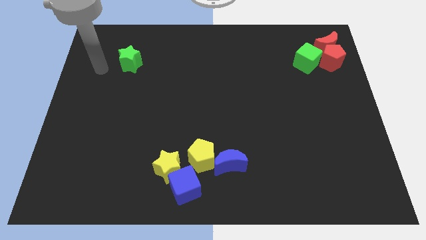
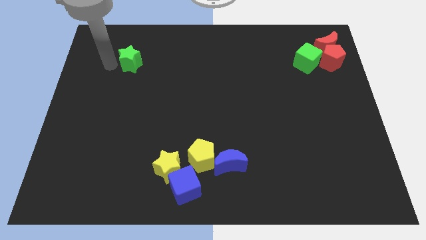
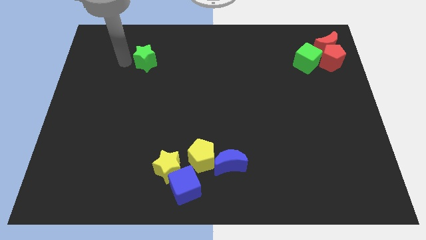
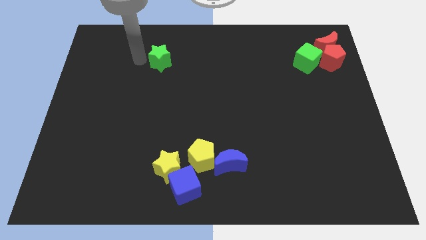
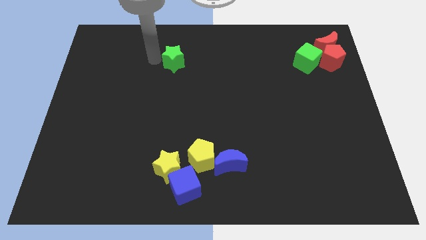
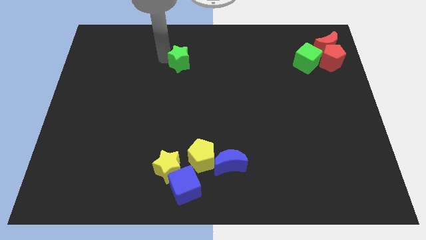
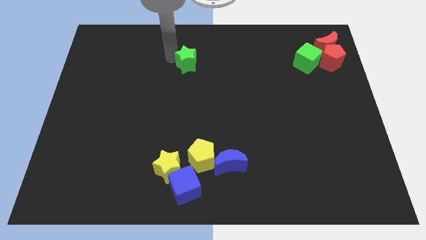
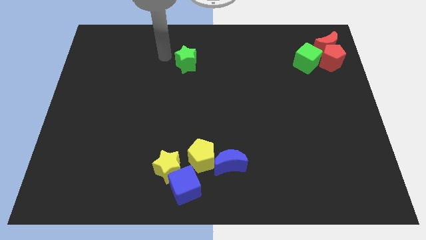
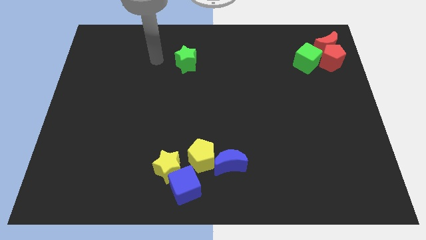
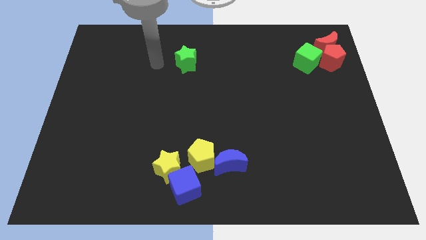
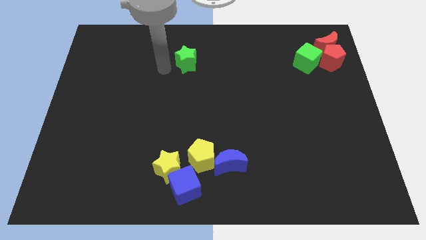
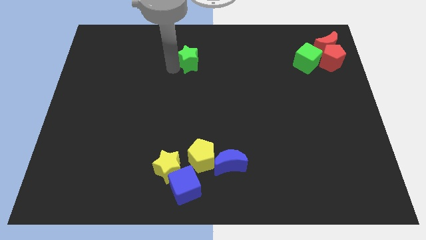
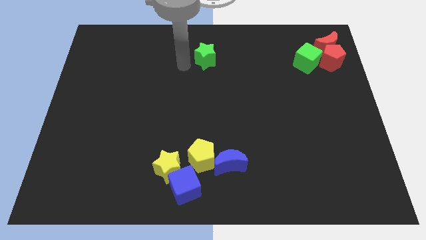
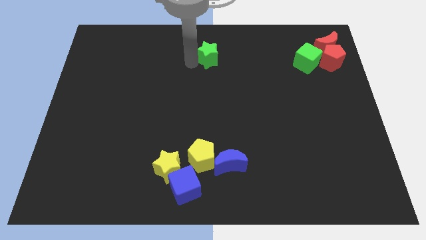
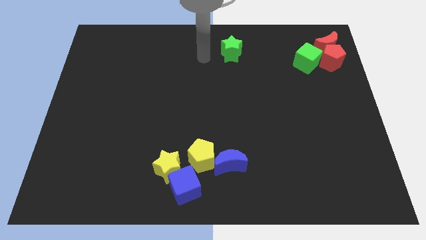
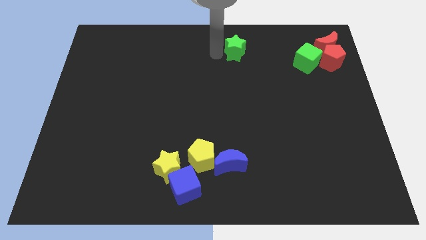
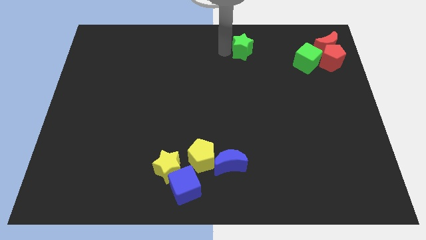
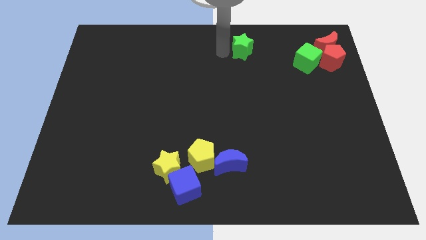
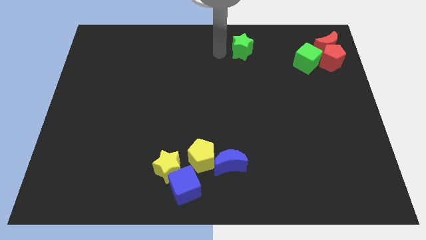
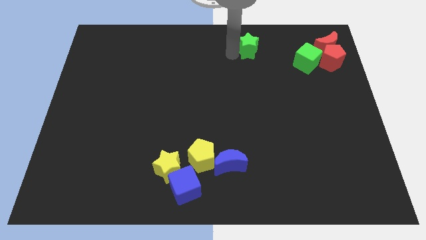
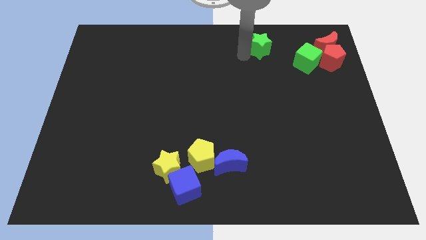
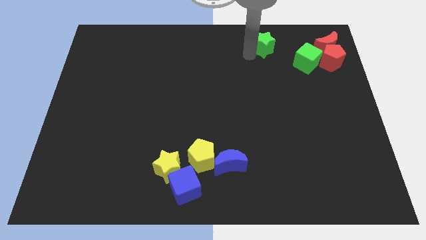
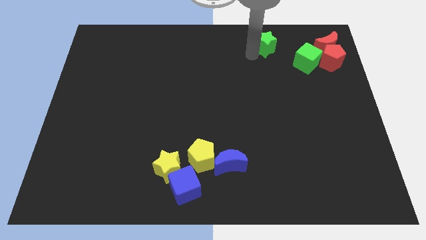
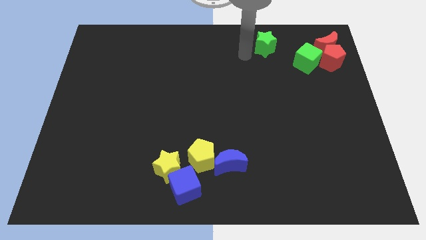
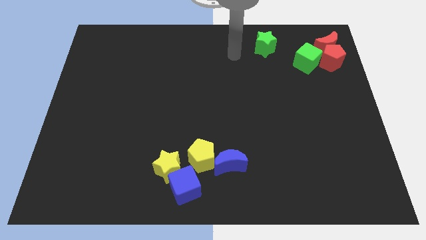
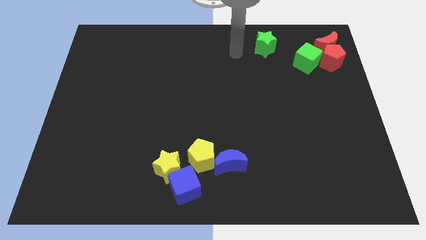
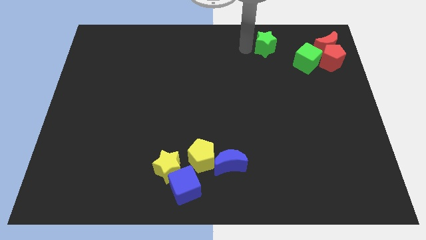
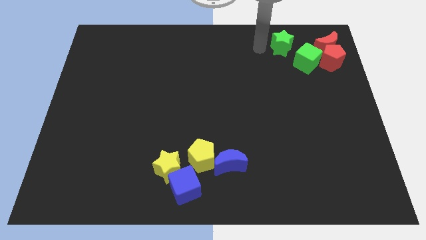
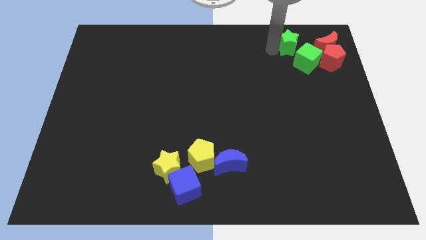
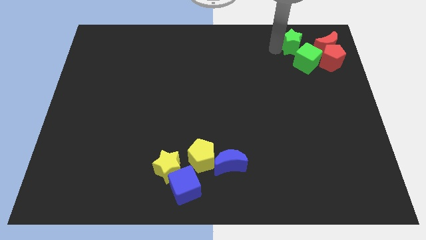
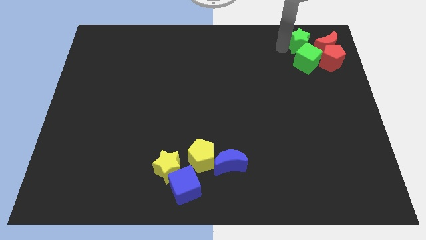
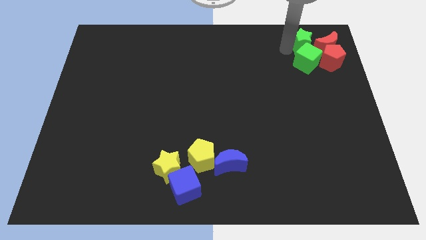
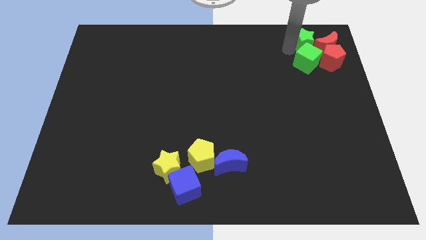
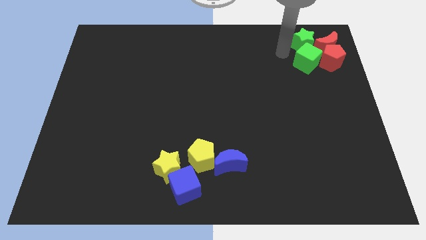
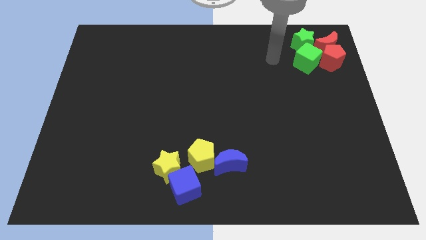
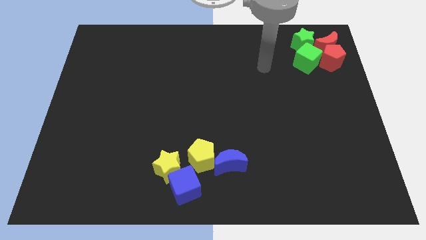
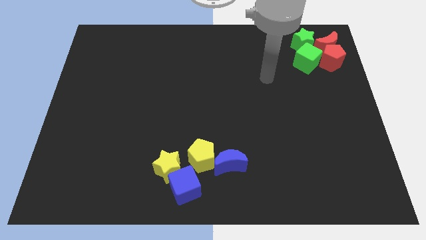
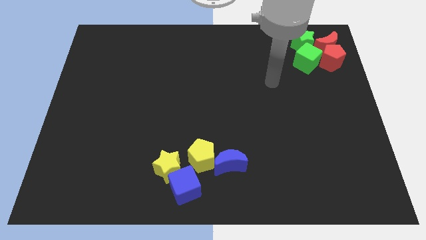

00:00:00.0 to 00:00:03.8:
place the green star above the green cube

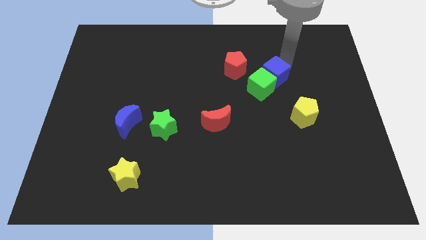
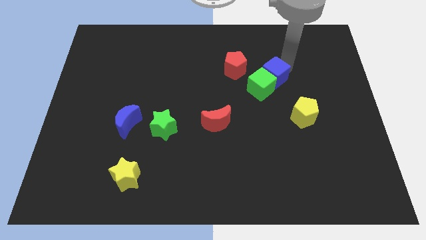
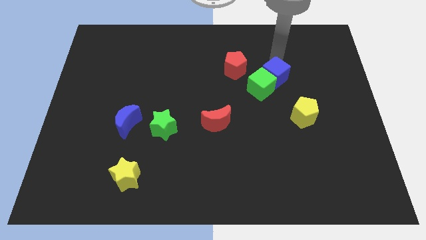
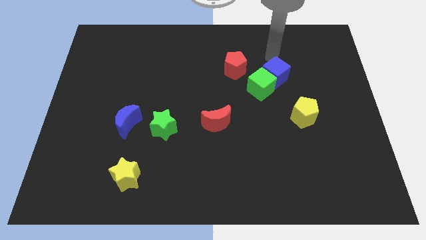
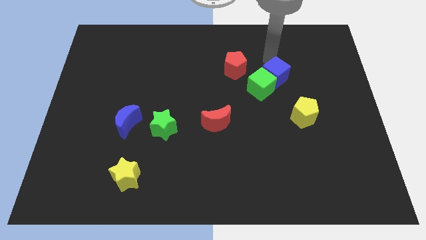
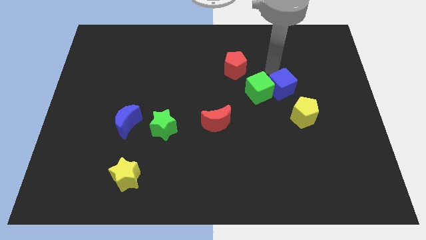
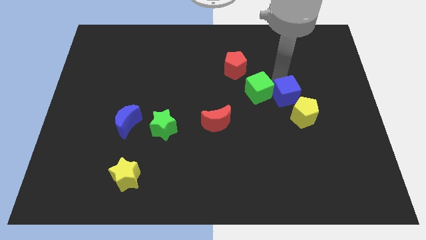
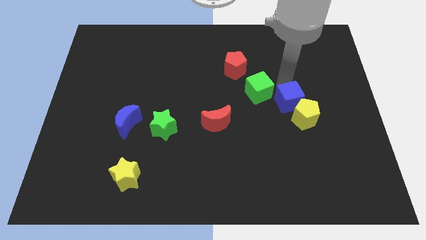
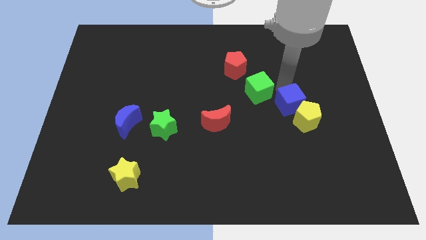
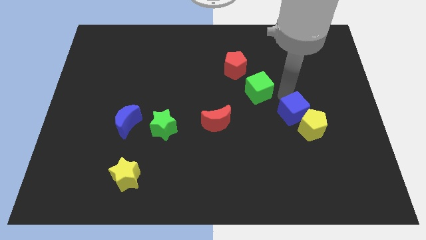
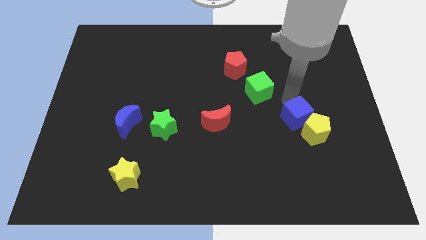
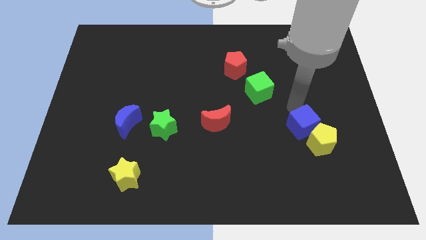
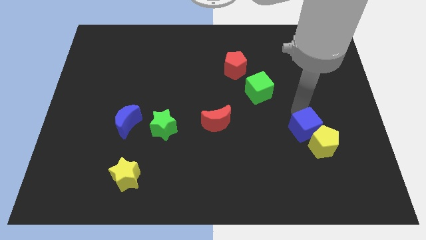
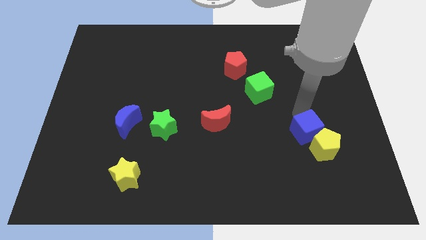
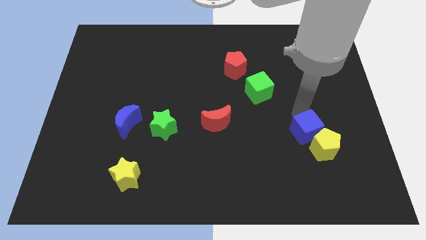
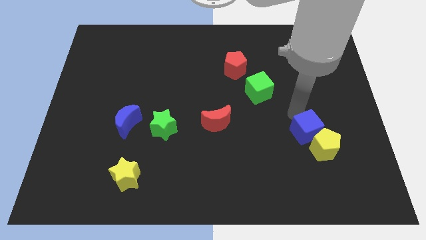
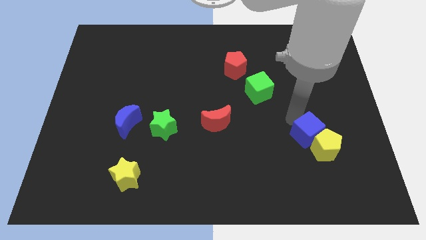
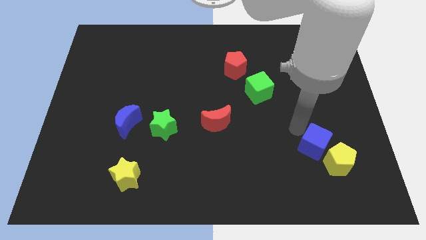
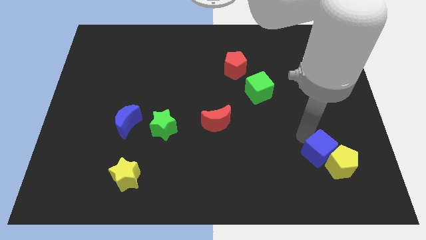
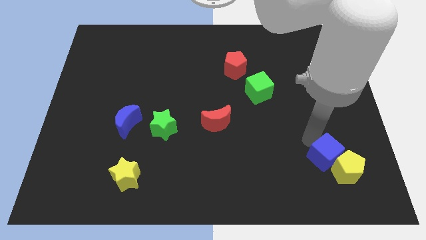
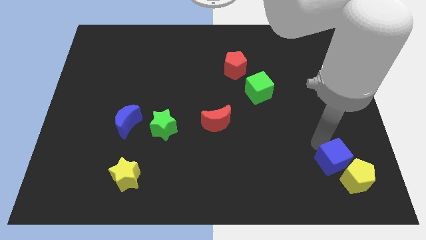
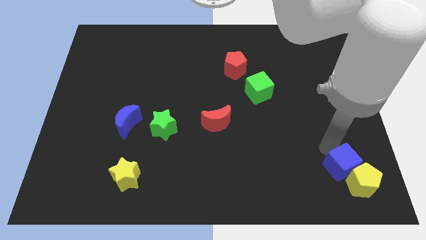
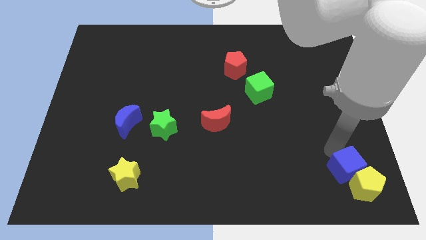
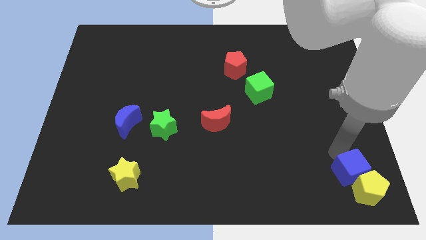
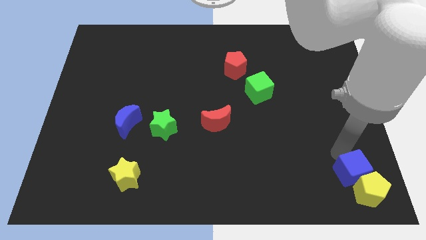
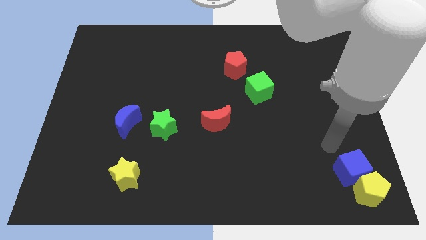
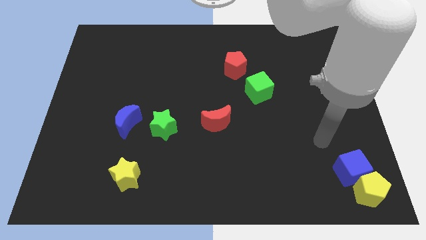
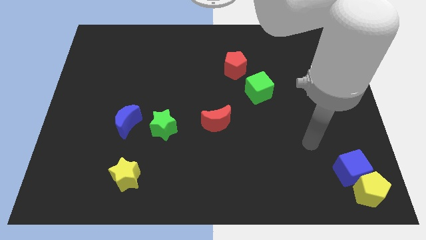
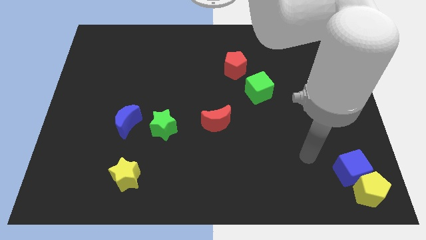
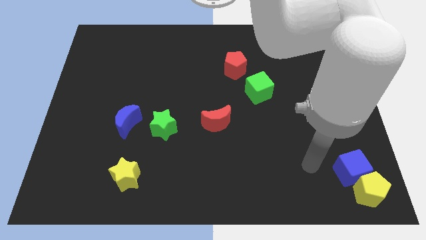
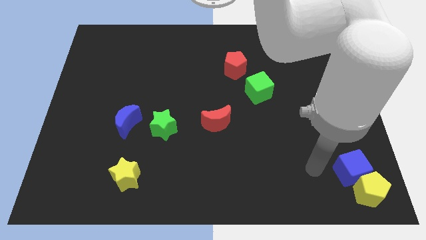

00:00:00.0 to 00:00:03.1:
move blue cube and yellow pentagon bottom right of the board

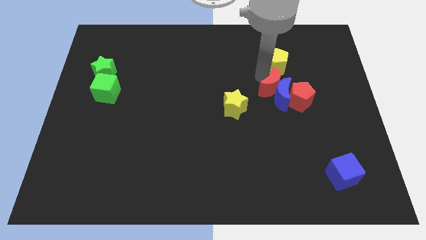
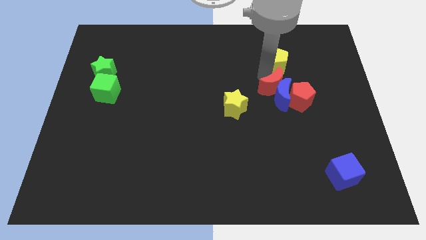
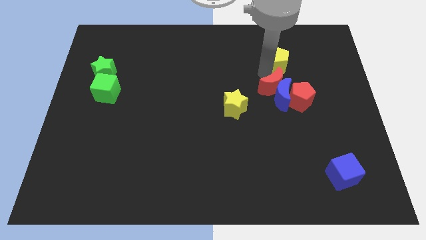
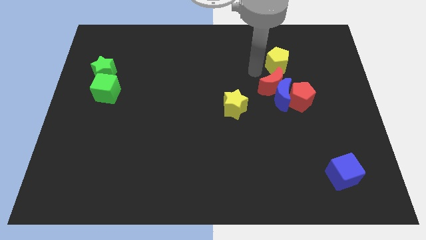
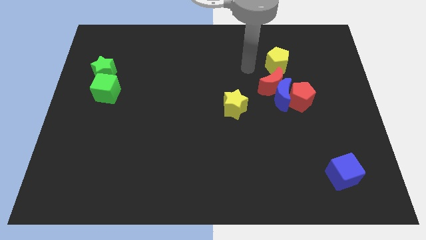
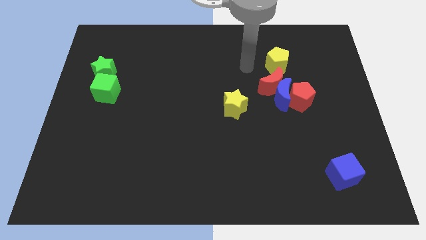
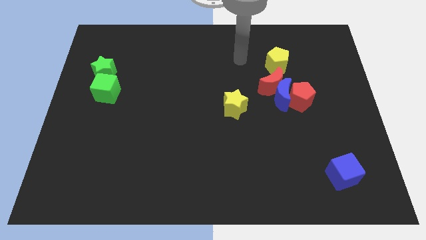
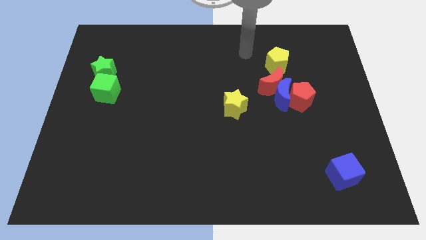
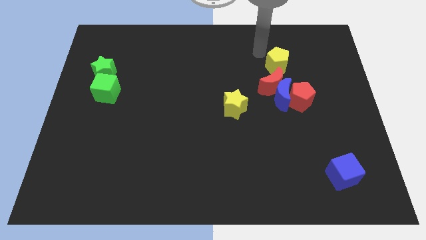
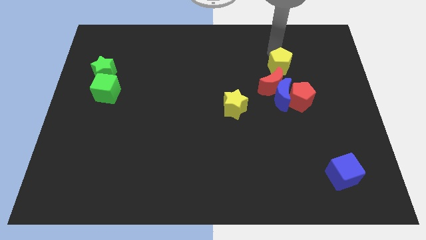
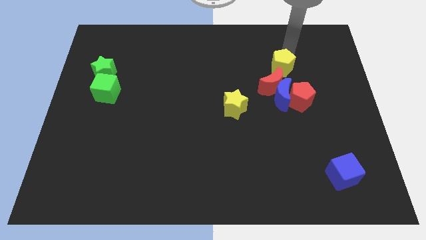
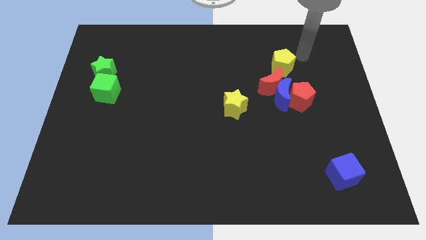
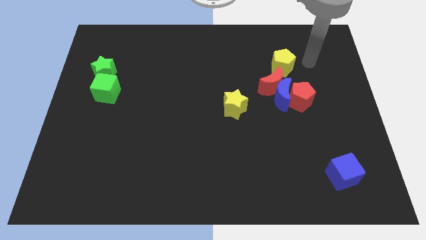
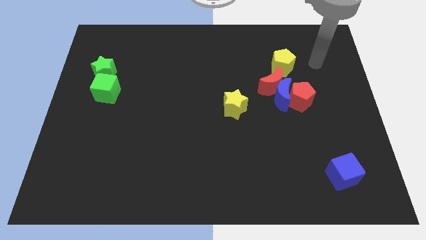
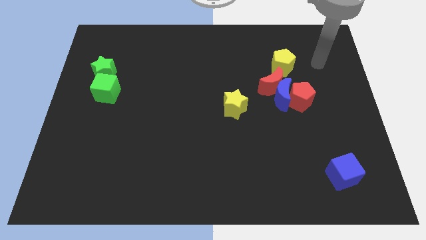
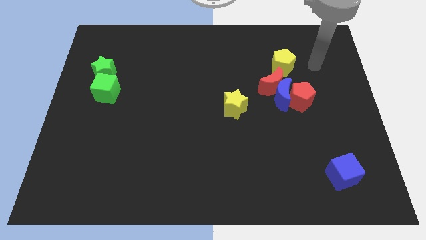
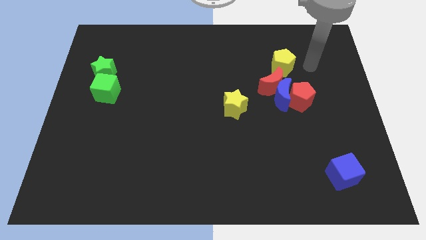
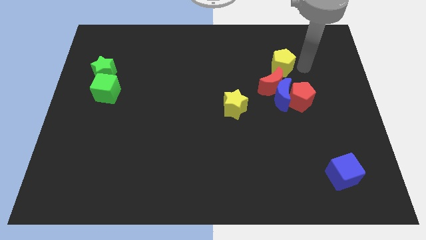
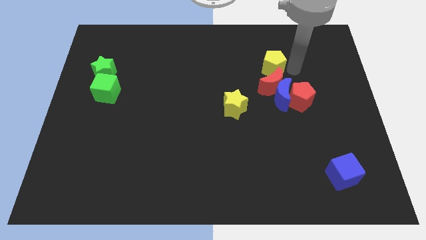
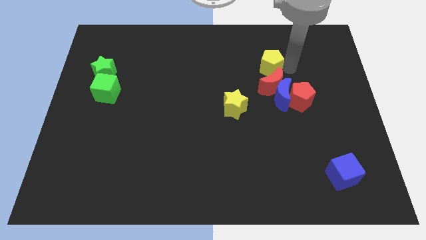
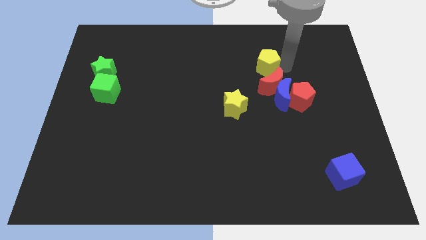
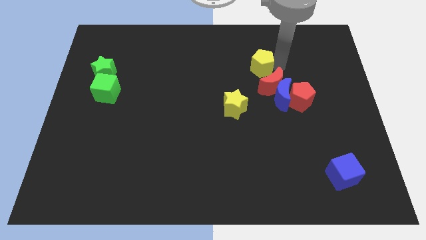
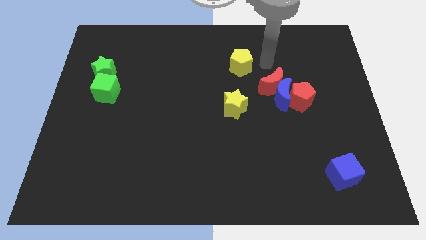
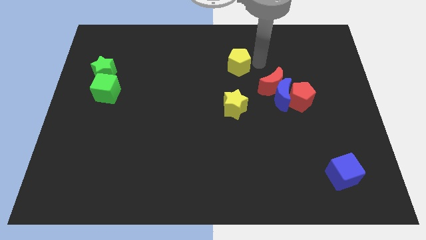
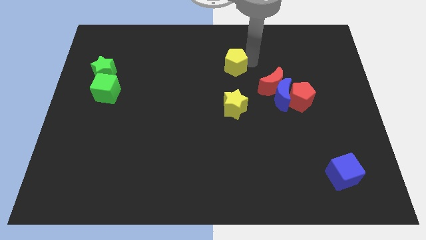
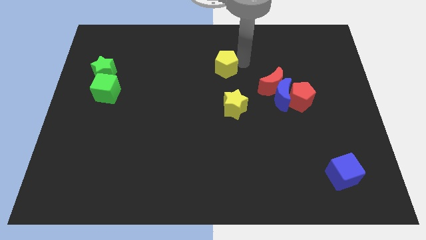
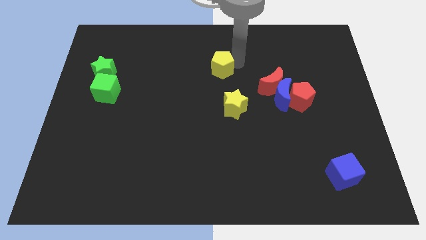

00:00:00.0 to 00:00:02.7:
place the yellow pentagon above the yellow star
